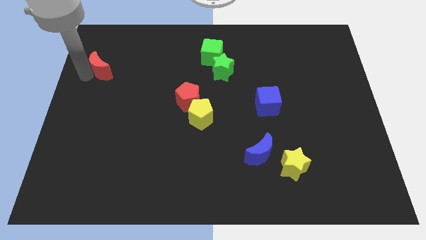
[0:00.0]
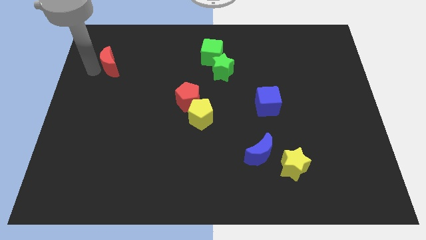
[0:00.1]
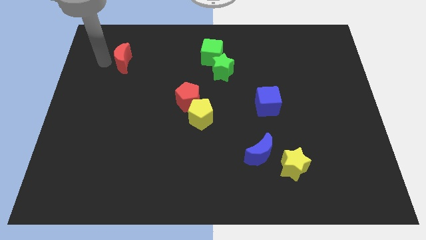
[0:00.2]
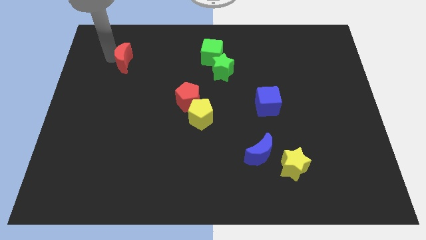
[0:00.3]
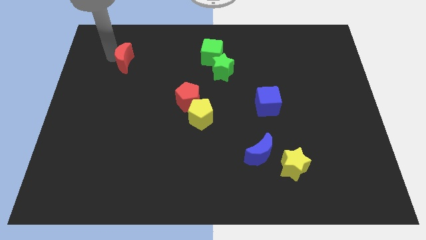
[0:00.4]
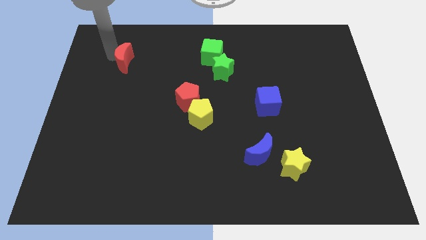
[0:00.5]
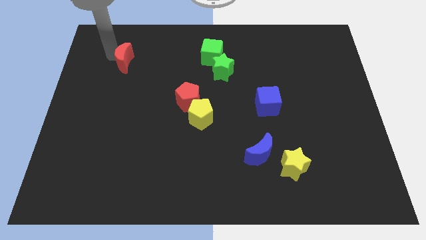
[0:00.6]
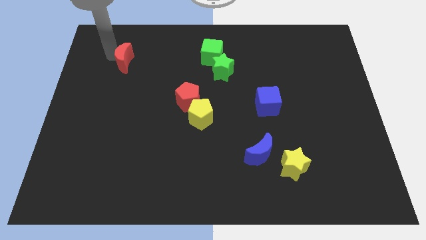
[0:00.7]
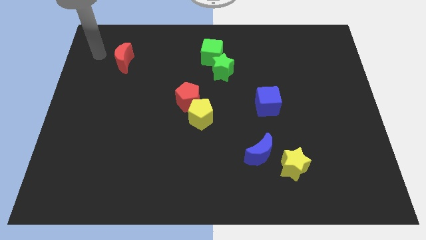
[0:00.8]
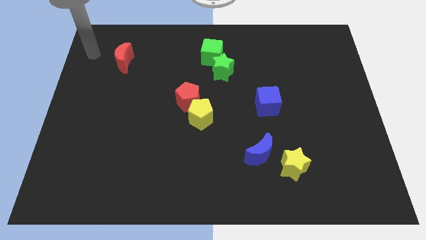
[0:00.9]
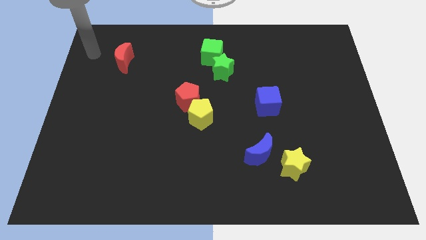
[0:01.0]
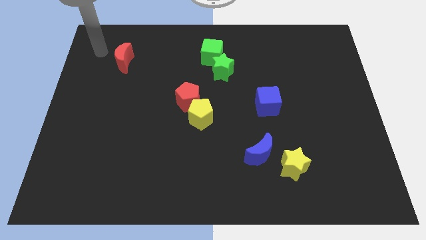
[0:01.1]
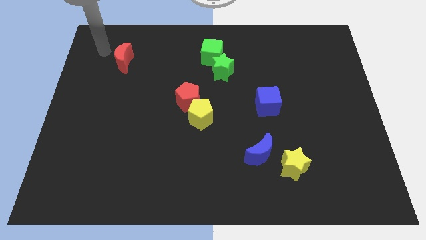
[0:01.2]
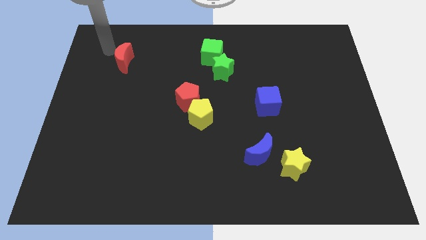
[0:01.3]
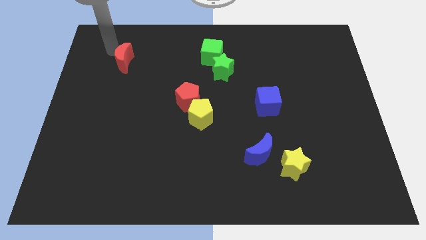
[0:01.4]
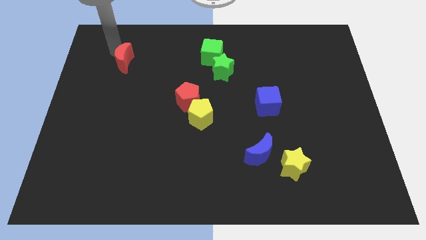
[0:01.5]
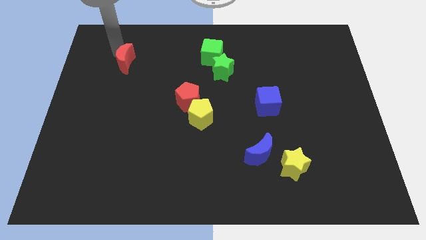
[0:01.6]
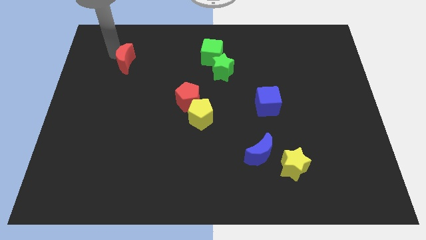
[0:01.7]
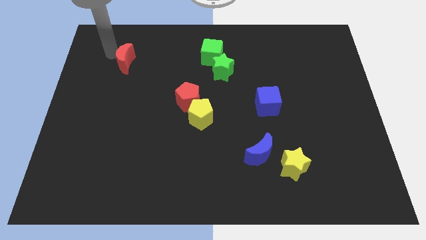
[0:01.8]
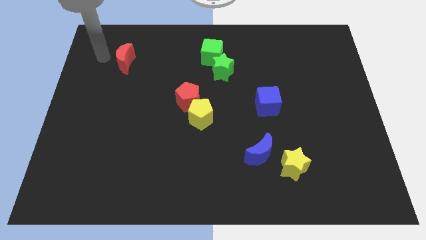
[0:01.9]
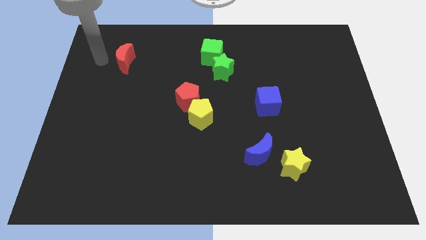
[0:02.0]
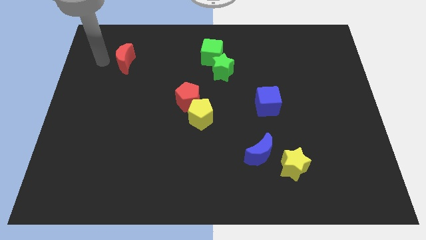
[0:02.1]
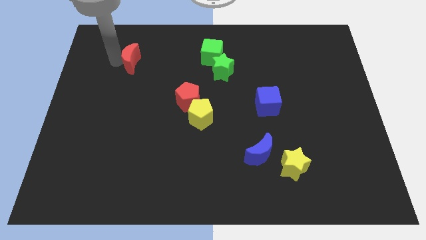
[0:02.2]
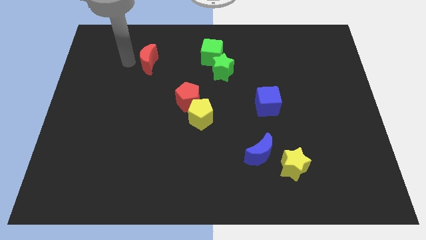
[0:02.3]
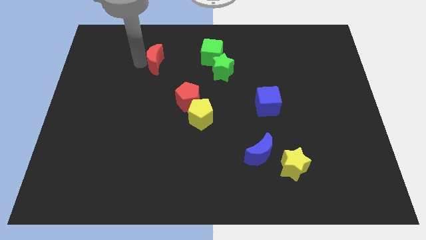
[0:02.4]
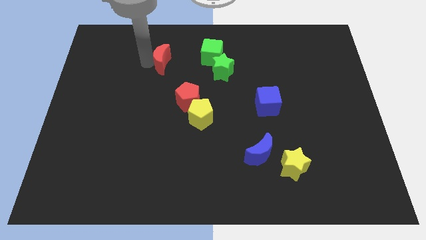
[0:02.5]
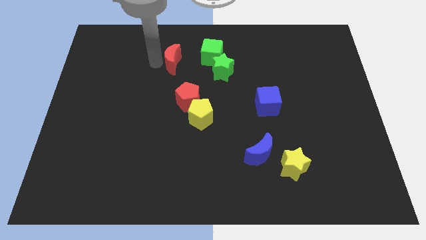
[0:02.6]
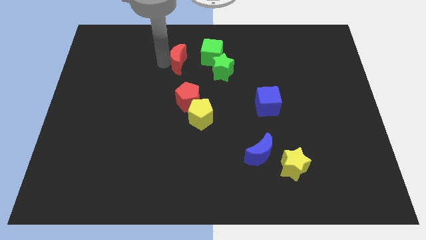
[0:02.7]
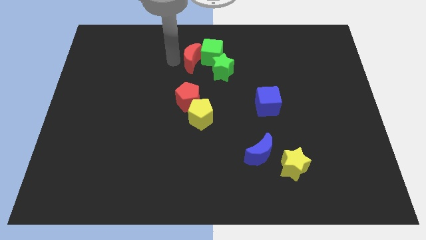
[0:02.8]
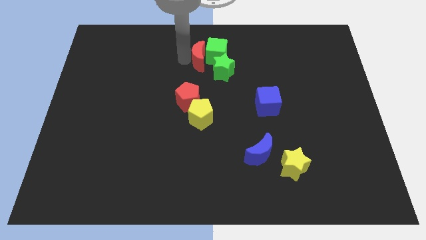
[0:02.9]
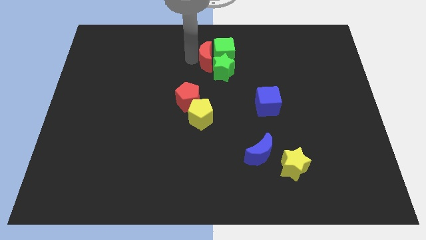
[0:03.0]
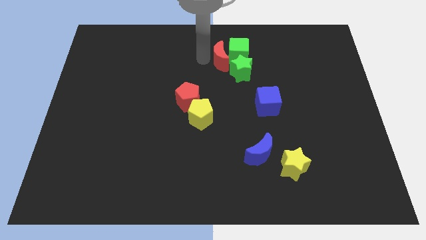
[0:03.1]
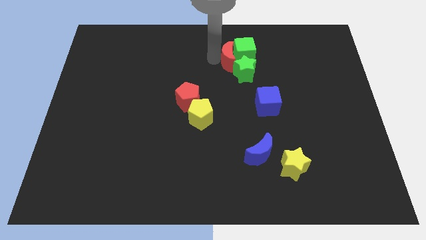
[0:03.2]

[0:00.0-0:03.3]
slide the red crescent into the left side of the green blocks

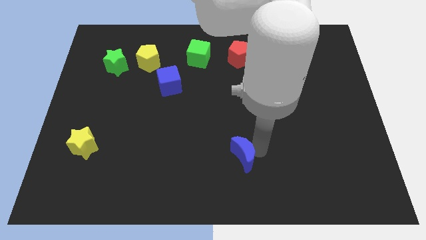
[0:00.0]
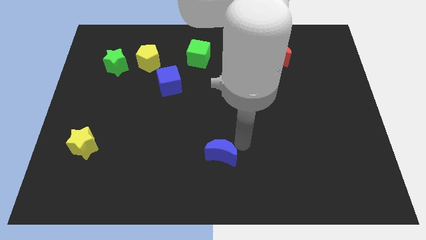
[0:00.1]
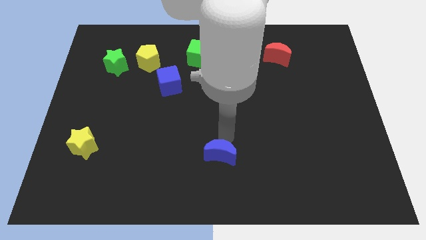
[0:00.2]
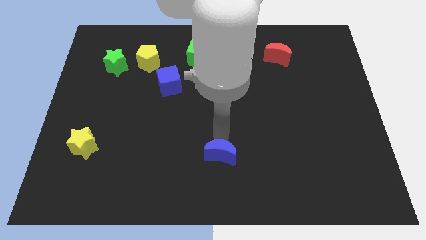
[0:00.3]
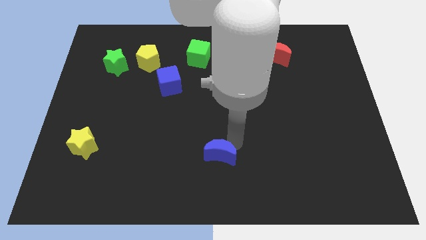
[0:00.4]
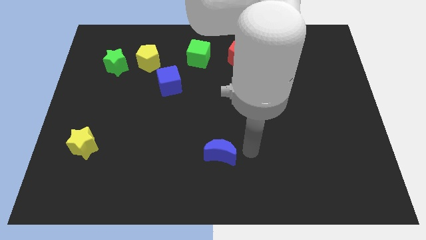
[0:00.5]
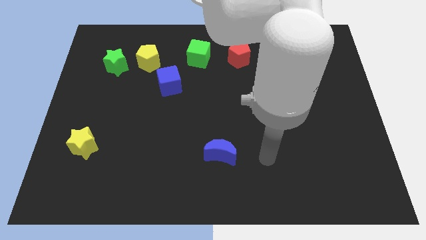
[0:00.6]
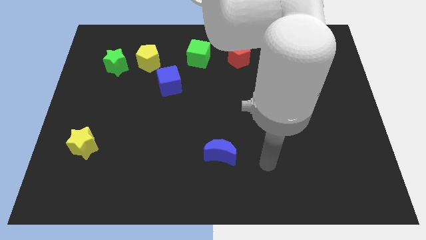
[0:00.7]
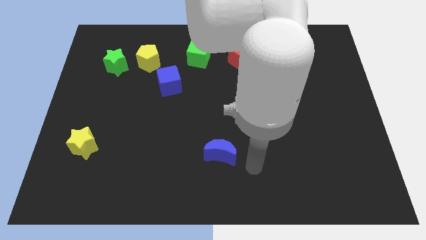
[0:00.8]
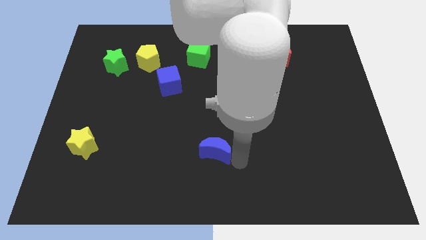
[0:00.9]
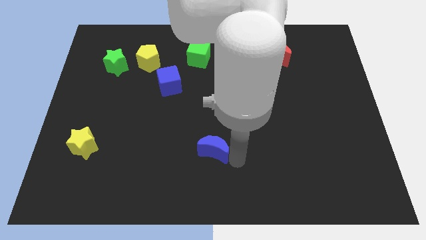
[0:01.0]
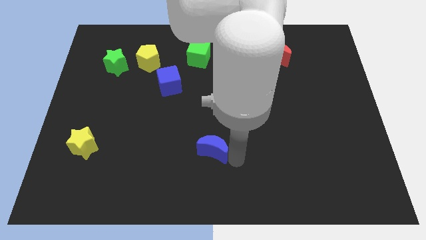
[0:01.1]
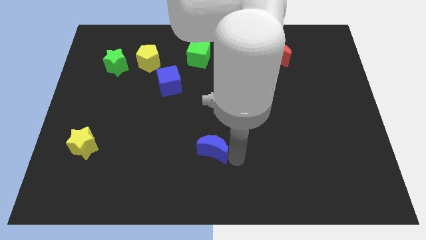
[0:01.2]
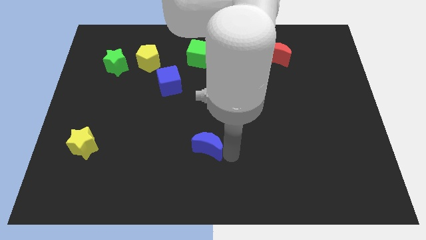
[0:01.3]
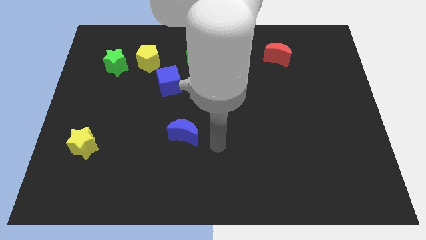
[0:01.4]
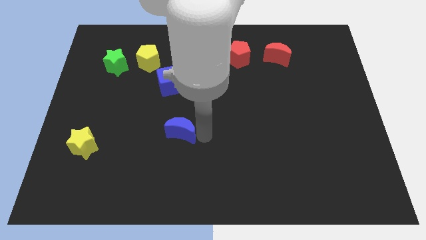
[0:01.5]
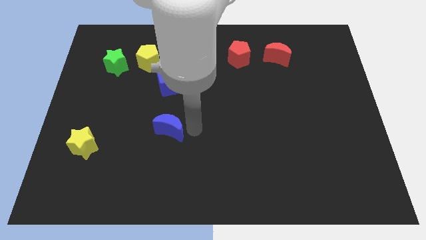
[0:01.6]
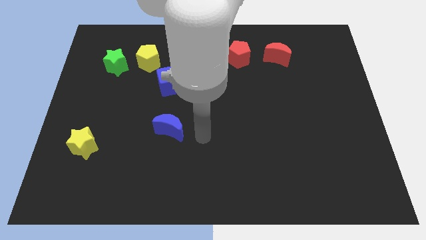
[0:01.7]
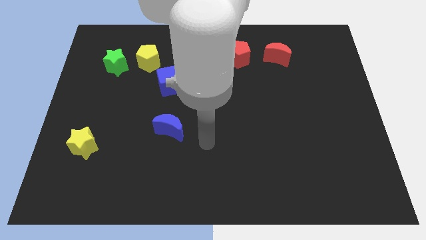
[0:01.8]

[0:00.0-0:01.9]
place the blue moon below the blue cube

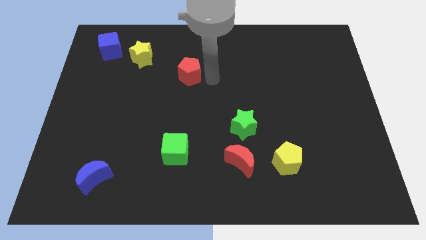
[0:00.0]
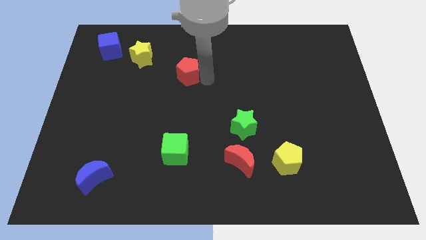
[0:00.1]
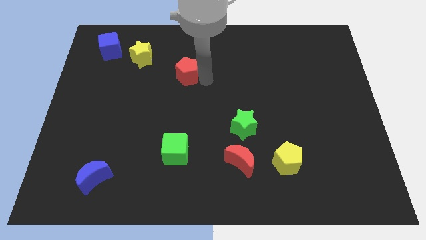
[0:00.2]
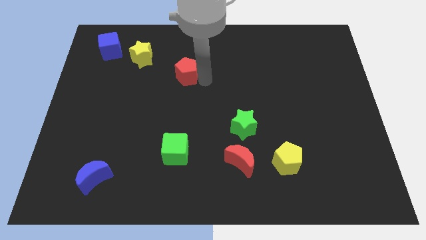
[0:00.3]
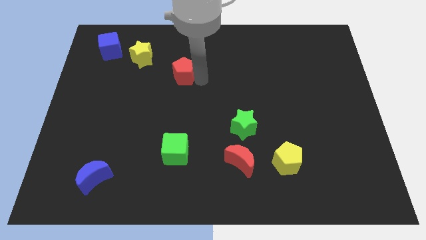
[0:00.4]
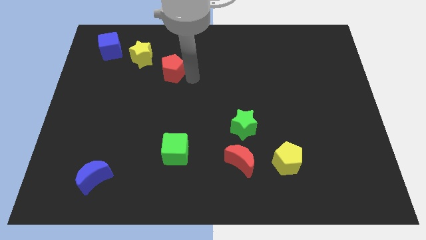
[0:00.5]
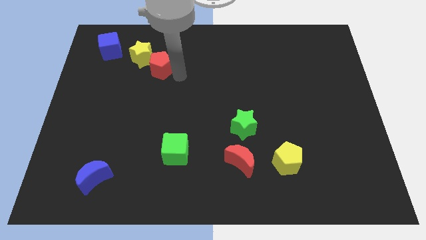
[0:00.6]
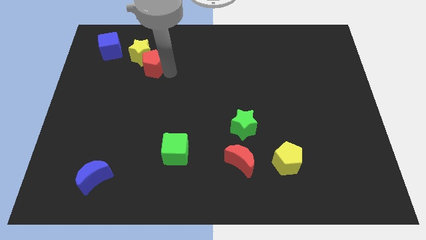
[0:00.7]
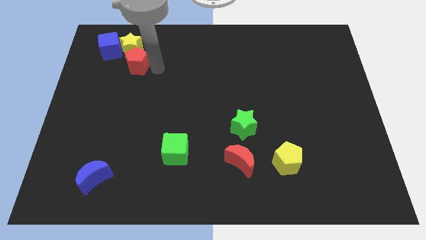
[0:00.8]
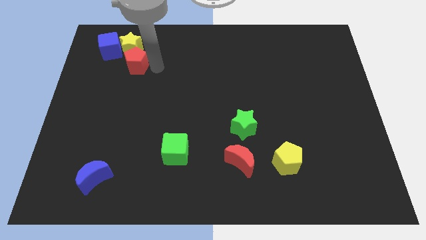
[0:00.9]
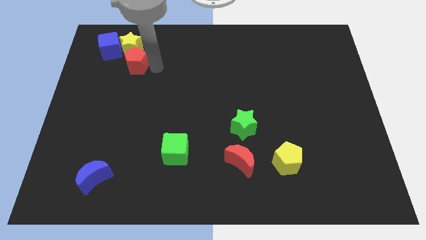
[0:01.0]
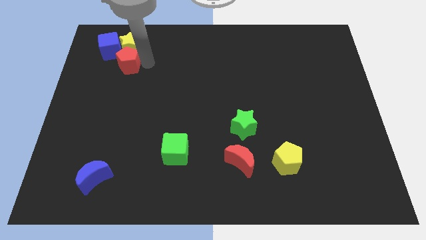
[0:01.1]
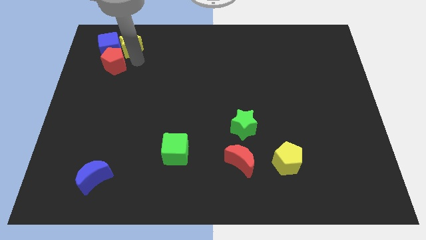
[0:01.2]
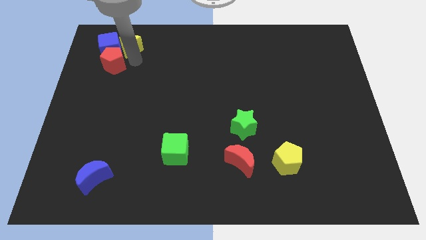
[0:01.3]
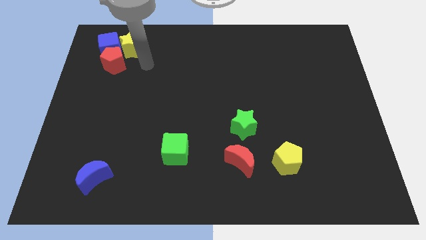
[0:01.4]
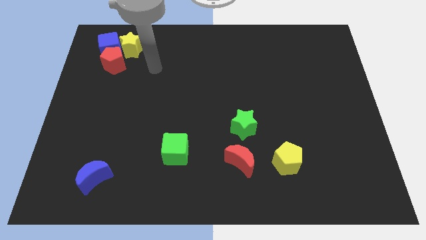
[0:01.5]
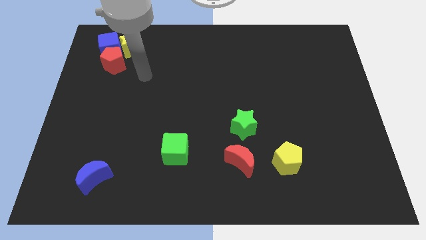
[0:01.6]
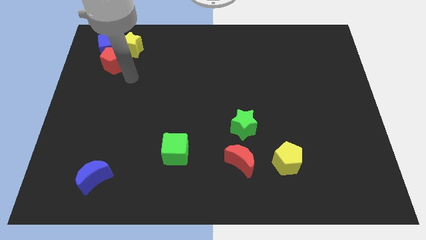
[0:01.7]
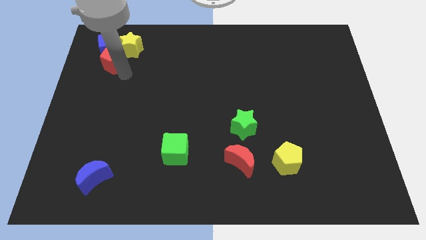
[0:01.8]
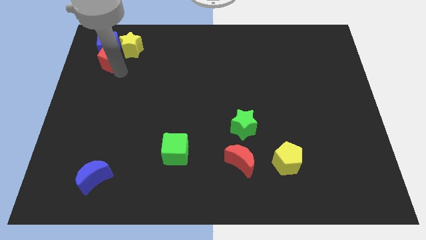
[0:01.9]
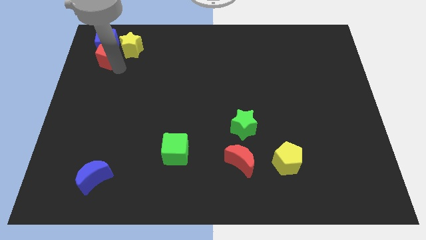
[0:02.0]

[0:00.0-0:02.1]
push the red pentagon at the bottom of the blue cube

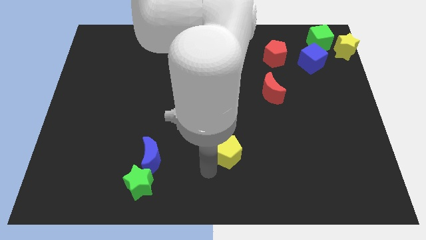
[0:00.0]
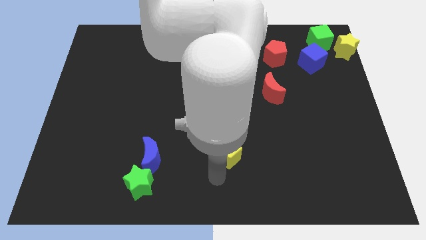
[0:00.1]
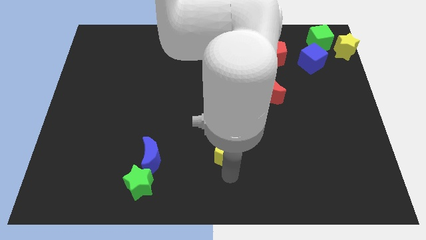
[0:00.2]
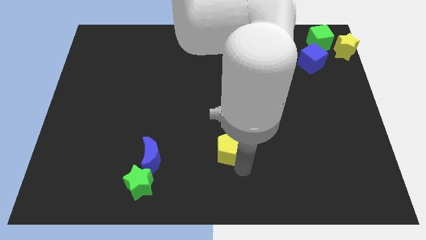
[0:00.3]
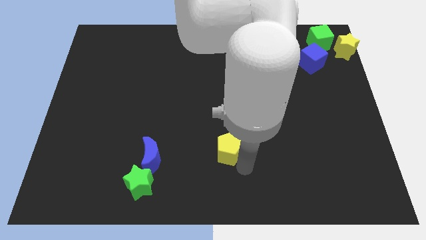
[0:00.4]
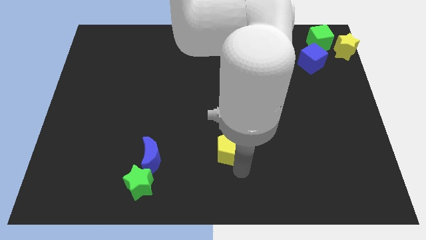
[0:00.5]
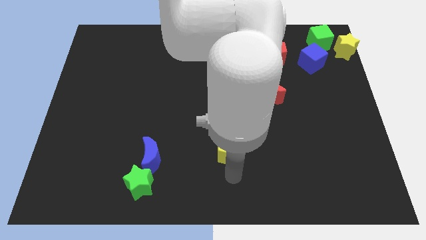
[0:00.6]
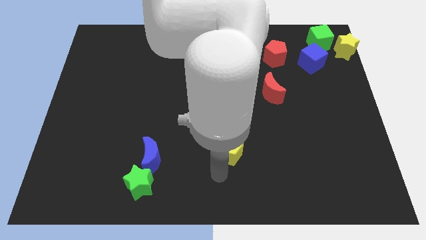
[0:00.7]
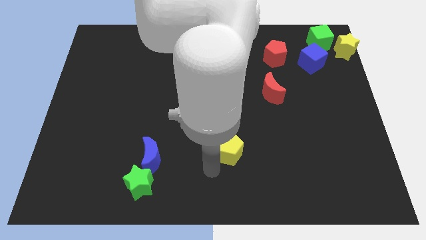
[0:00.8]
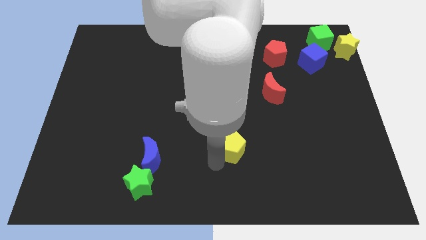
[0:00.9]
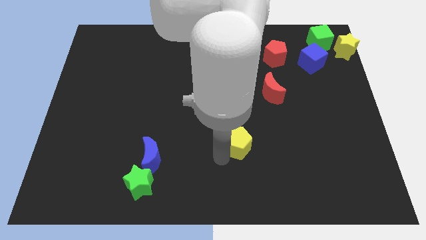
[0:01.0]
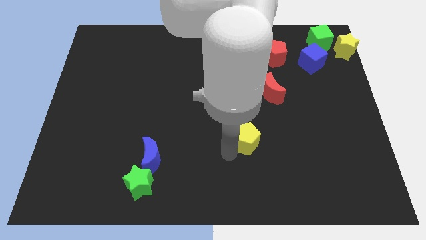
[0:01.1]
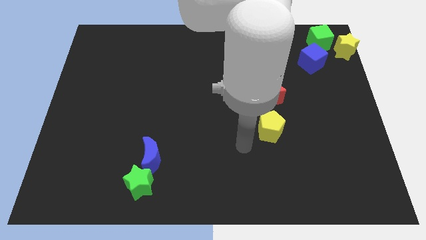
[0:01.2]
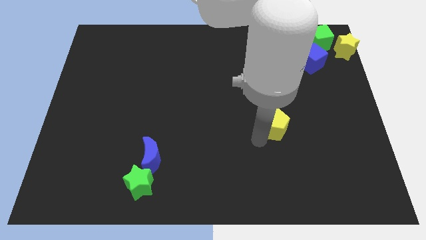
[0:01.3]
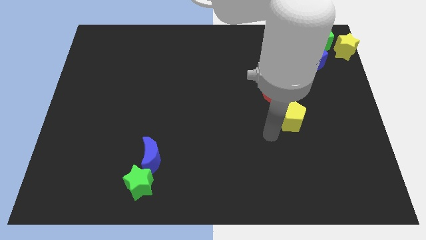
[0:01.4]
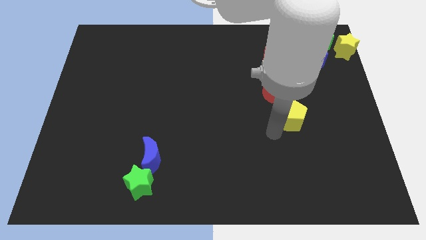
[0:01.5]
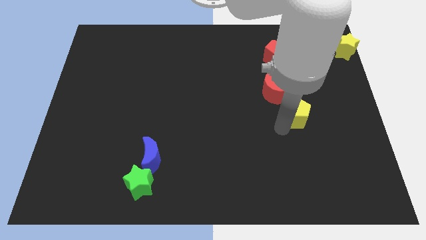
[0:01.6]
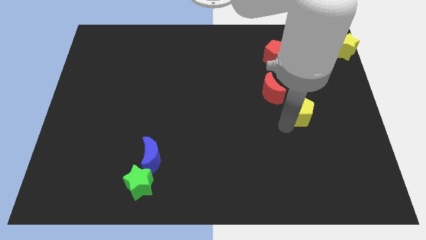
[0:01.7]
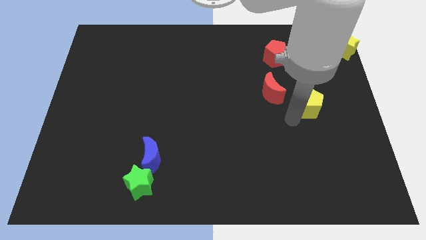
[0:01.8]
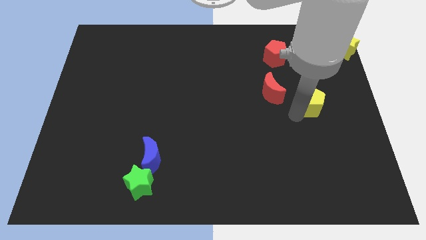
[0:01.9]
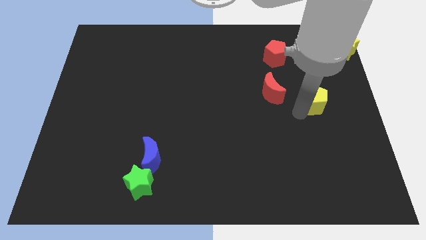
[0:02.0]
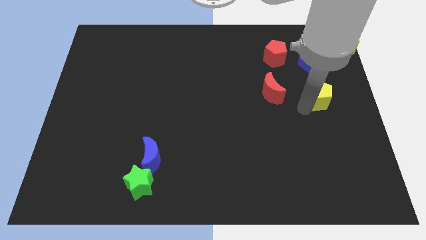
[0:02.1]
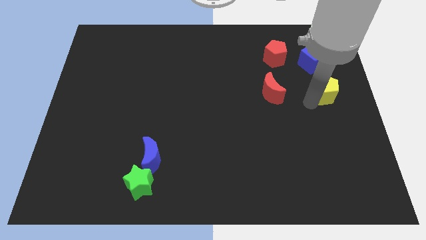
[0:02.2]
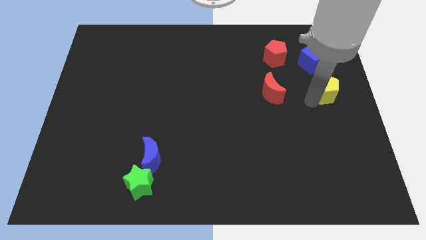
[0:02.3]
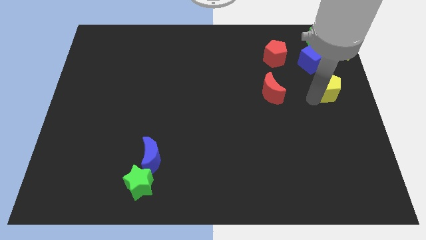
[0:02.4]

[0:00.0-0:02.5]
move the yellow pentagon to the right side of the red moon
